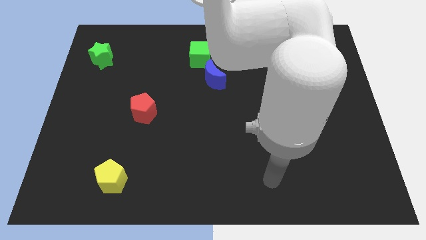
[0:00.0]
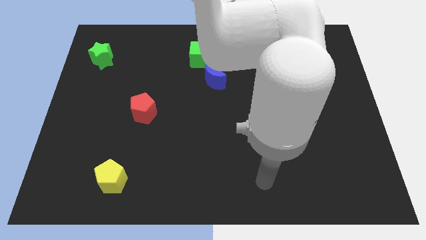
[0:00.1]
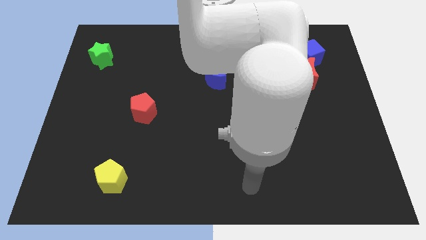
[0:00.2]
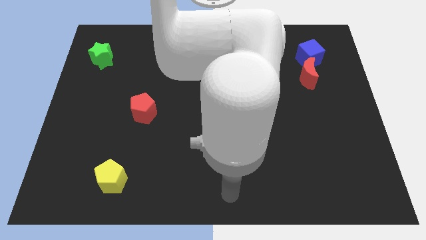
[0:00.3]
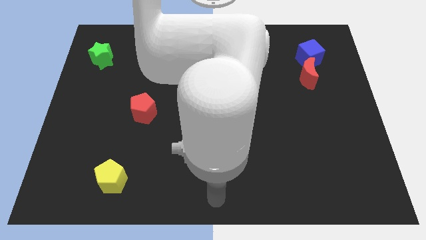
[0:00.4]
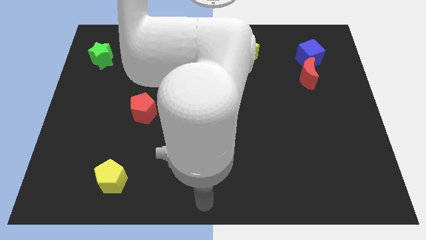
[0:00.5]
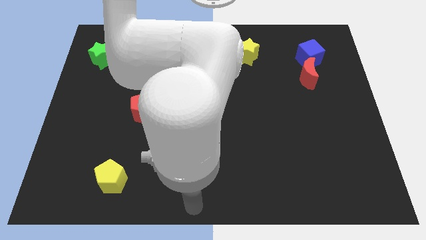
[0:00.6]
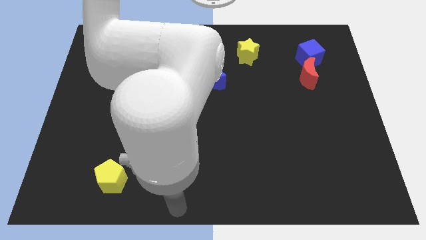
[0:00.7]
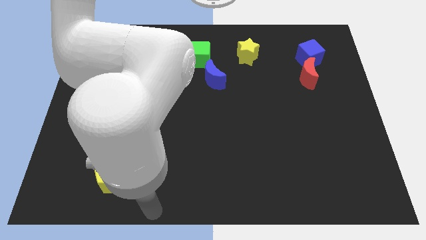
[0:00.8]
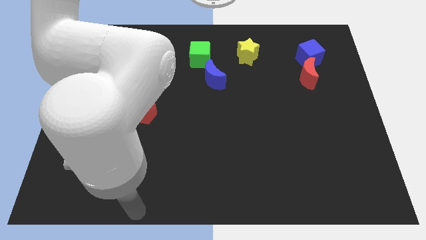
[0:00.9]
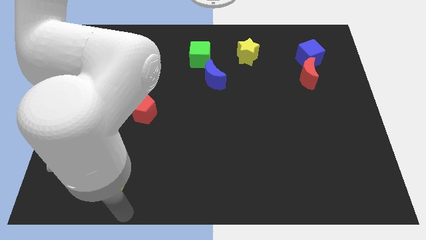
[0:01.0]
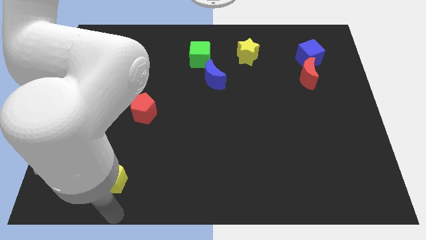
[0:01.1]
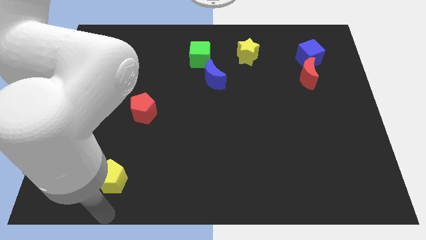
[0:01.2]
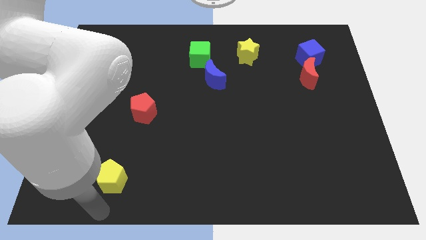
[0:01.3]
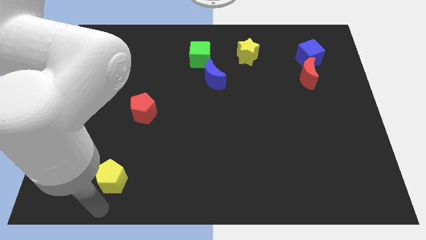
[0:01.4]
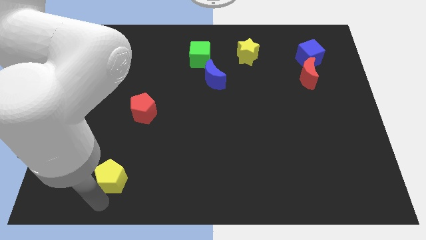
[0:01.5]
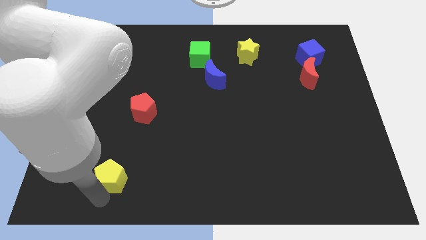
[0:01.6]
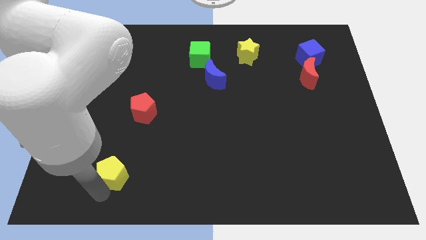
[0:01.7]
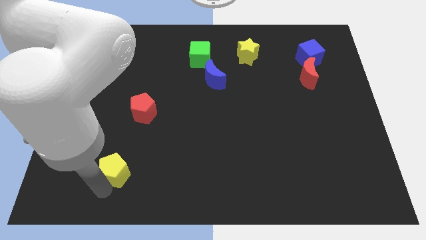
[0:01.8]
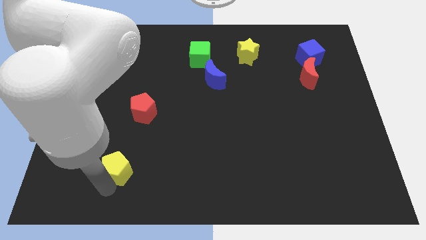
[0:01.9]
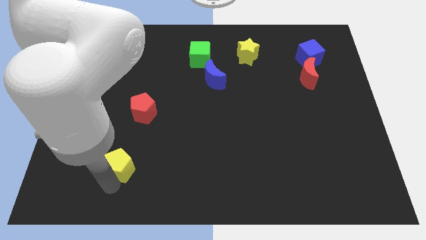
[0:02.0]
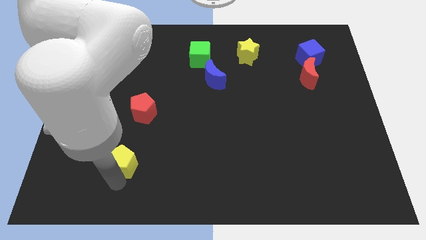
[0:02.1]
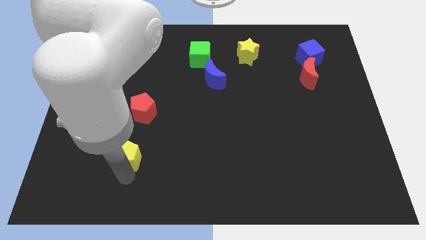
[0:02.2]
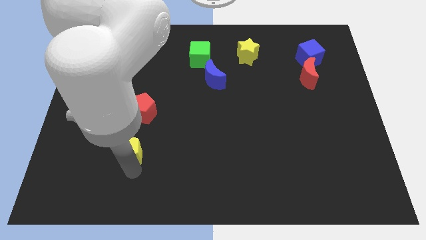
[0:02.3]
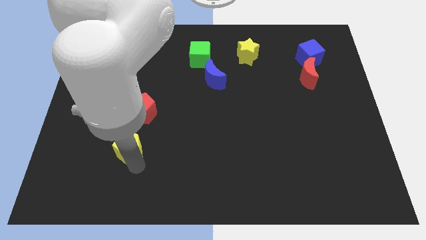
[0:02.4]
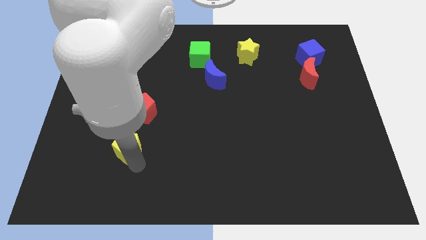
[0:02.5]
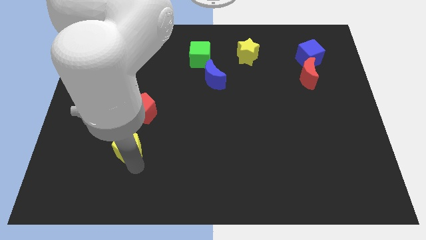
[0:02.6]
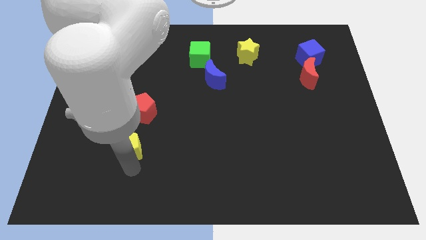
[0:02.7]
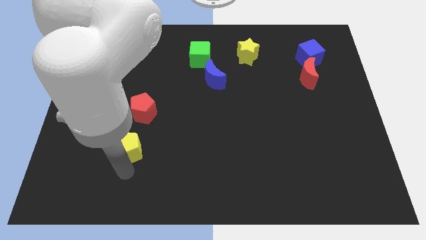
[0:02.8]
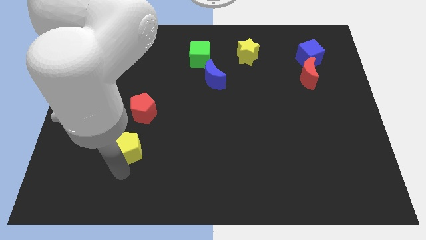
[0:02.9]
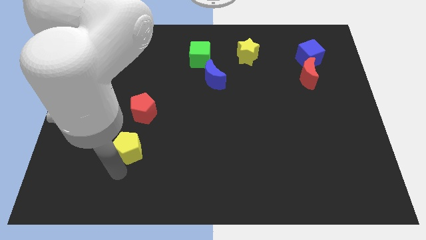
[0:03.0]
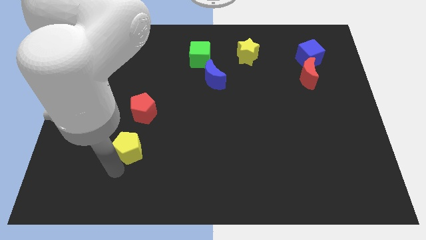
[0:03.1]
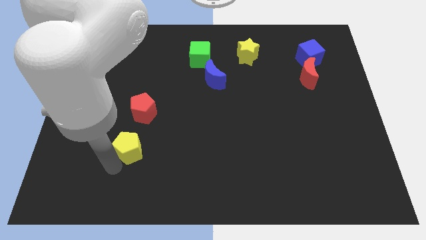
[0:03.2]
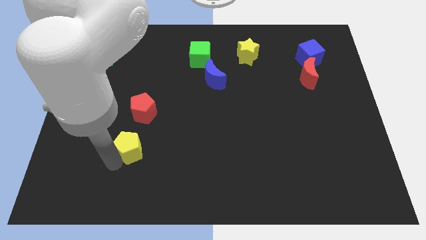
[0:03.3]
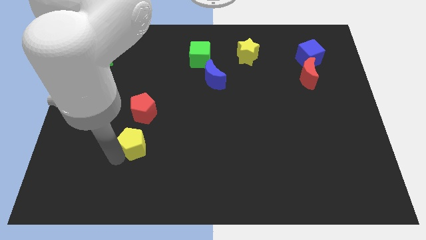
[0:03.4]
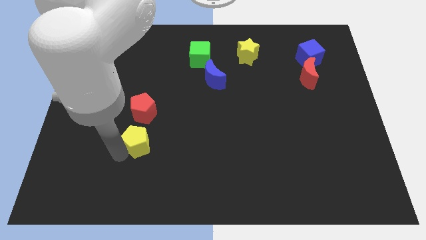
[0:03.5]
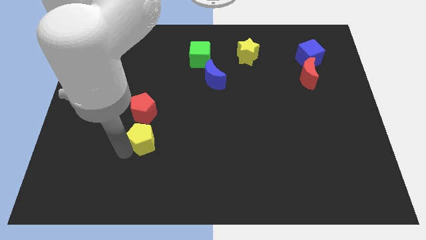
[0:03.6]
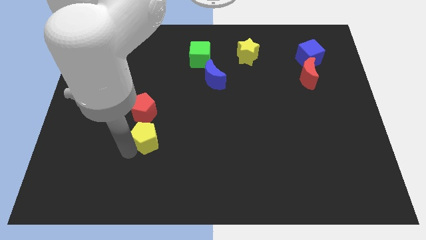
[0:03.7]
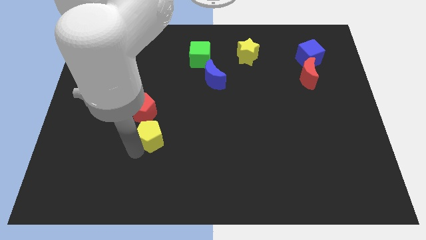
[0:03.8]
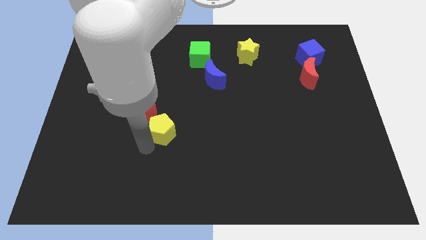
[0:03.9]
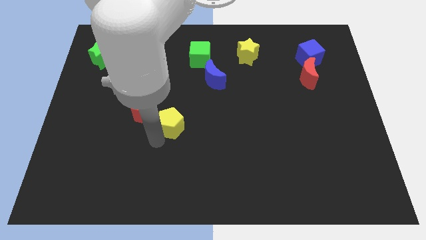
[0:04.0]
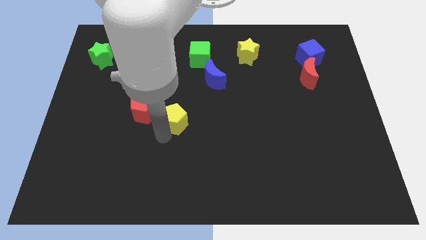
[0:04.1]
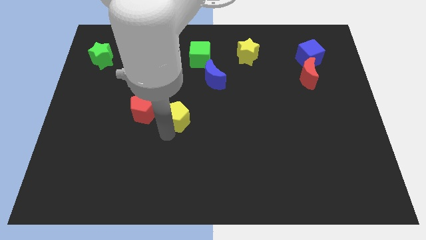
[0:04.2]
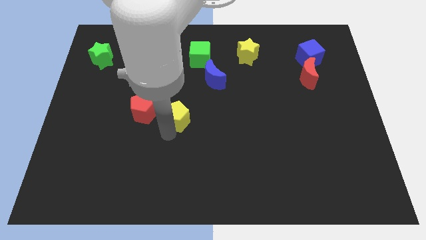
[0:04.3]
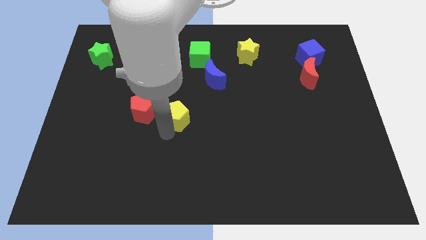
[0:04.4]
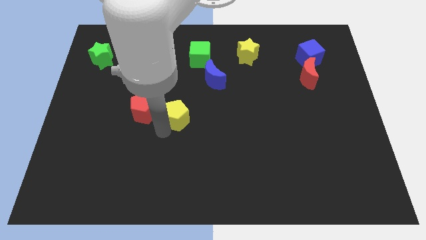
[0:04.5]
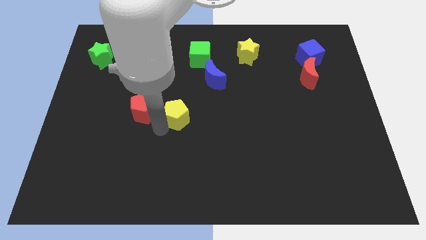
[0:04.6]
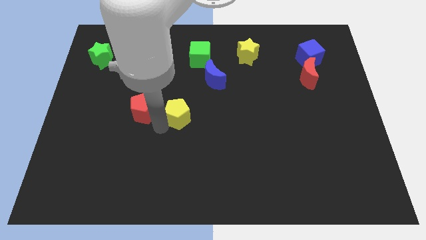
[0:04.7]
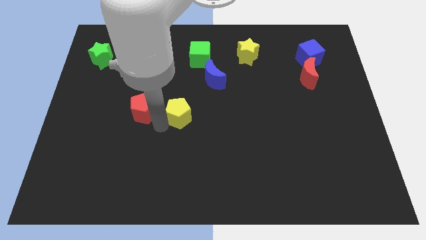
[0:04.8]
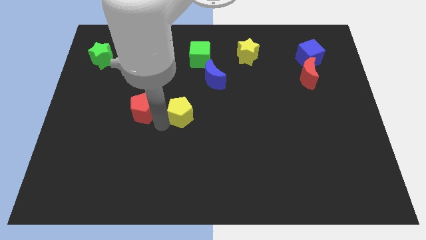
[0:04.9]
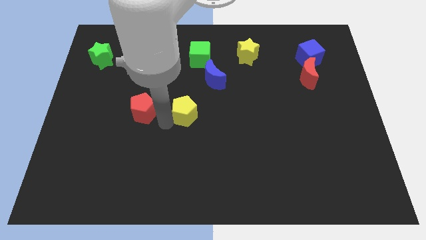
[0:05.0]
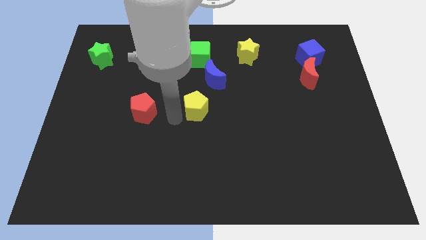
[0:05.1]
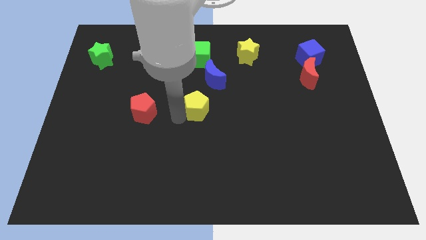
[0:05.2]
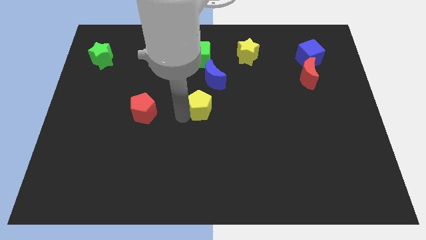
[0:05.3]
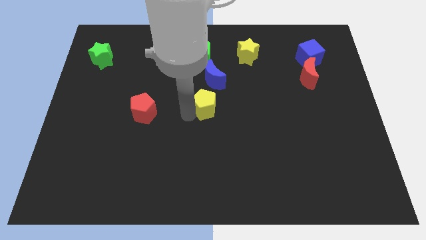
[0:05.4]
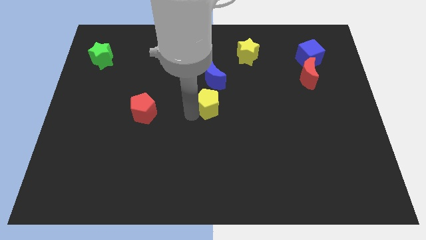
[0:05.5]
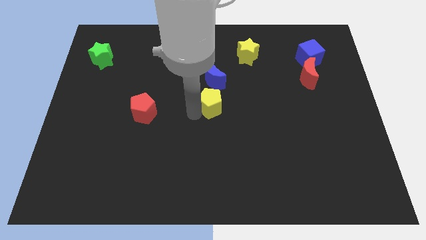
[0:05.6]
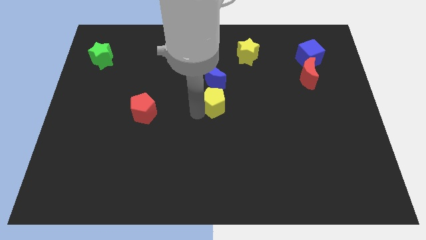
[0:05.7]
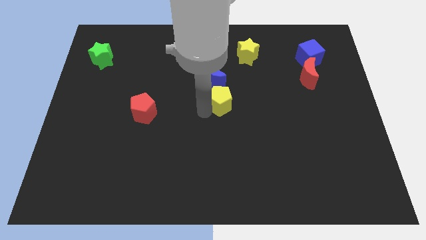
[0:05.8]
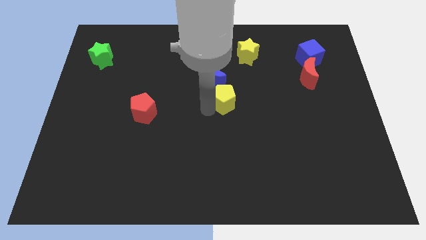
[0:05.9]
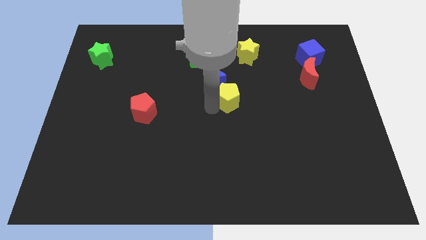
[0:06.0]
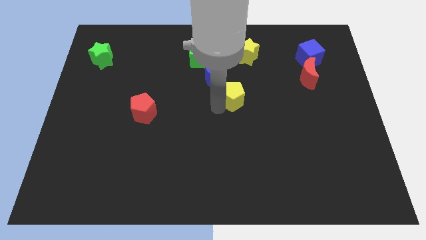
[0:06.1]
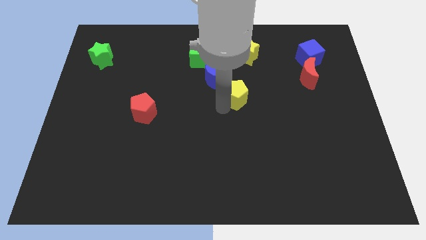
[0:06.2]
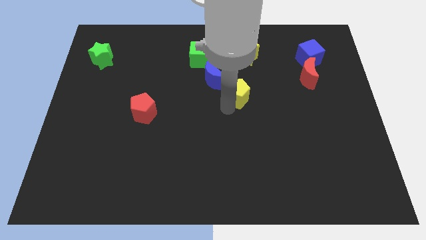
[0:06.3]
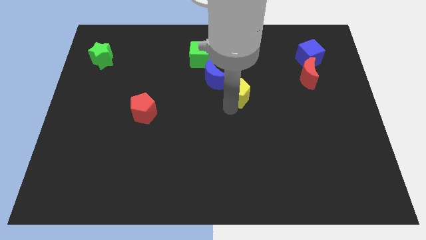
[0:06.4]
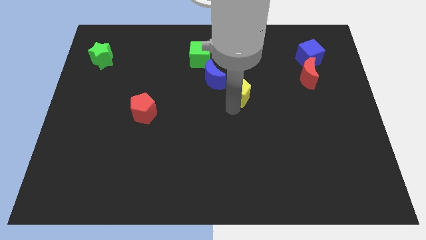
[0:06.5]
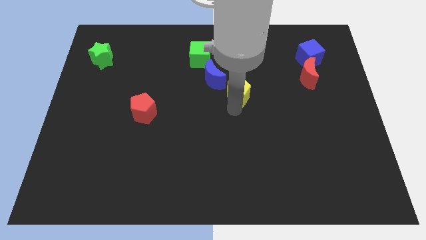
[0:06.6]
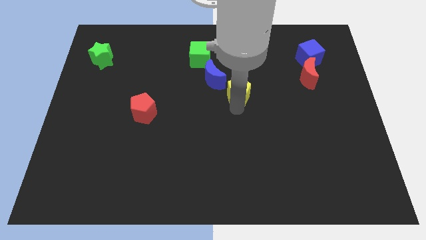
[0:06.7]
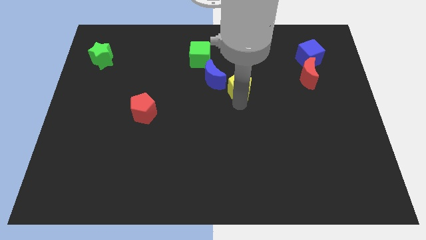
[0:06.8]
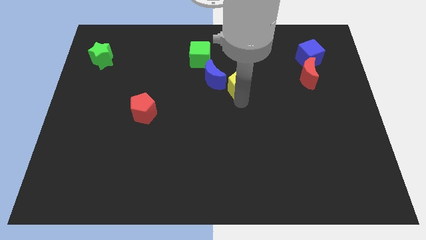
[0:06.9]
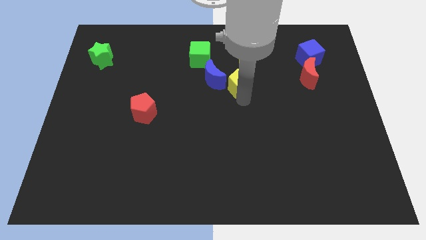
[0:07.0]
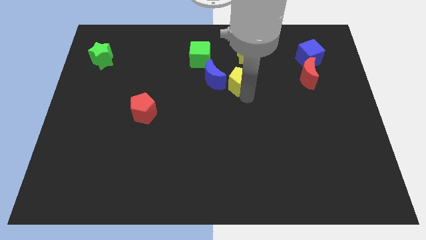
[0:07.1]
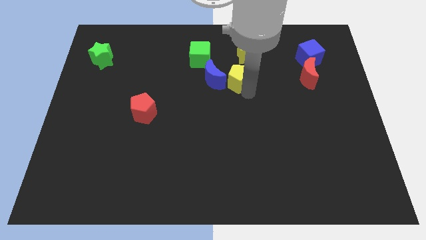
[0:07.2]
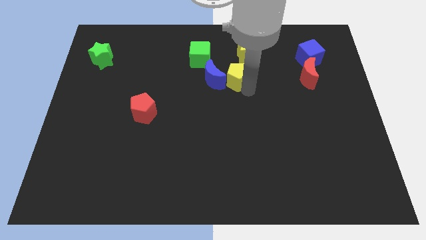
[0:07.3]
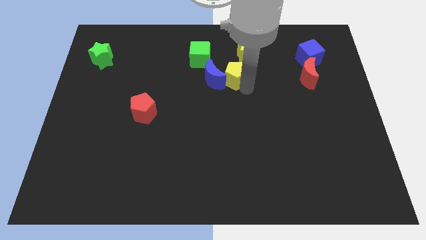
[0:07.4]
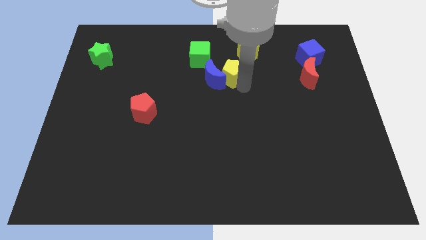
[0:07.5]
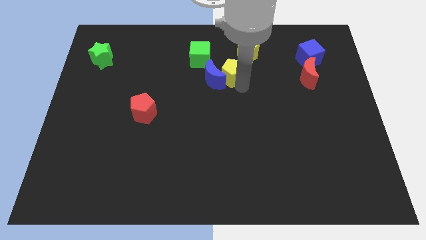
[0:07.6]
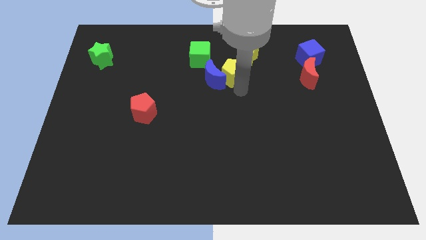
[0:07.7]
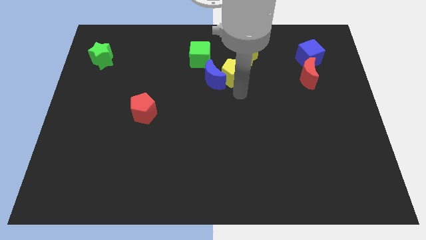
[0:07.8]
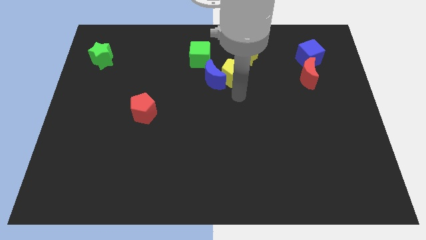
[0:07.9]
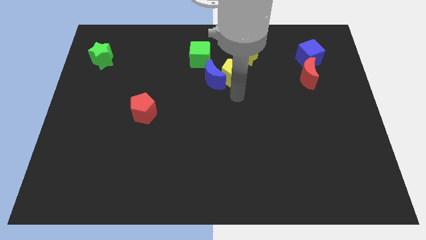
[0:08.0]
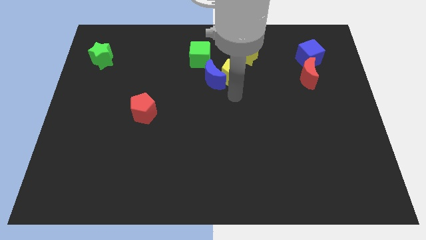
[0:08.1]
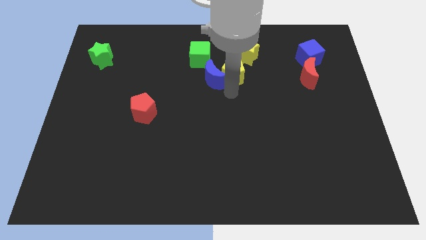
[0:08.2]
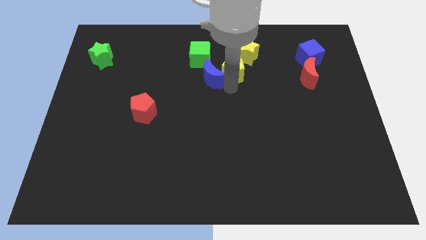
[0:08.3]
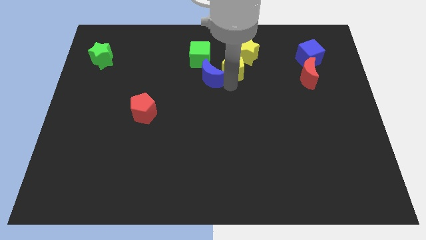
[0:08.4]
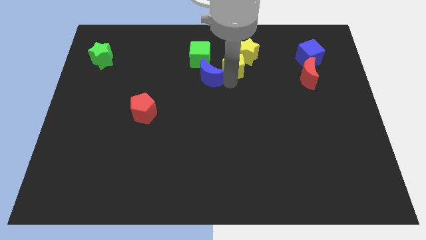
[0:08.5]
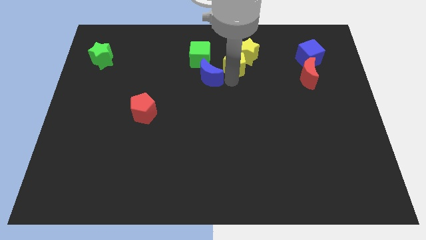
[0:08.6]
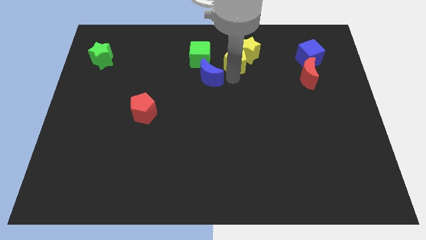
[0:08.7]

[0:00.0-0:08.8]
slide the yellow pentagon towards the yellow star
